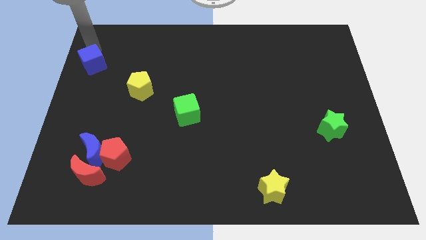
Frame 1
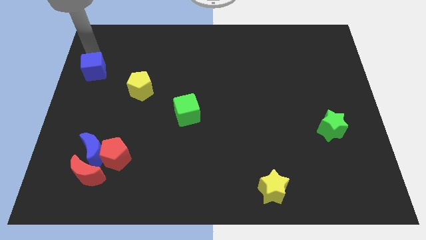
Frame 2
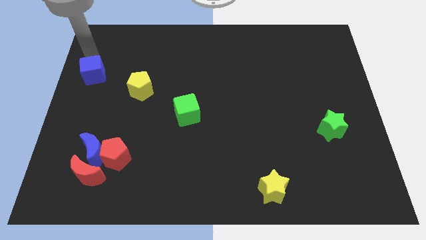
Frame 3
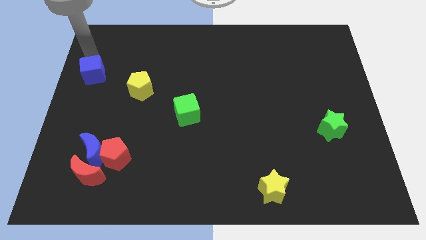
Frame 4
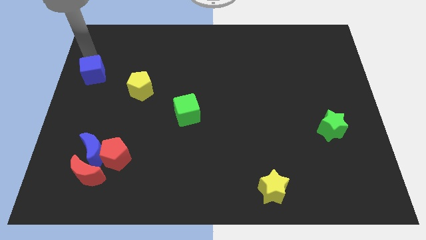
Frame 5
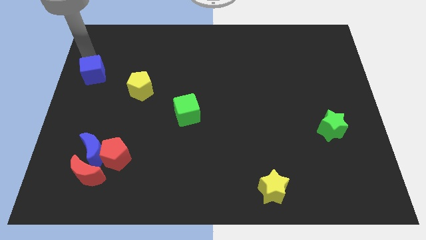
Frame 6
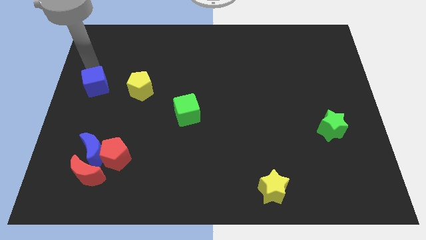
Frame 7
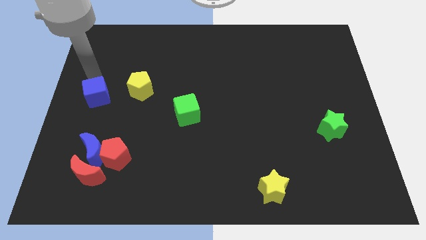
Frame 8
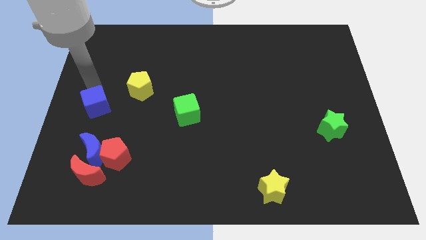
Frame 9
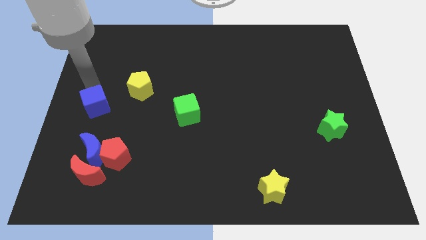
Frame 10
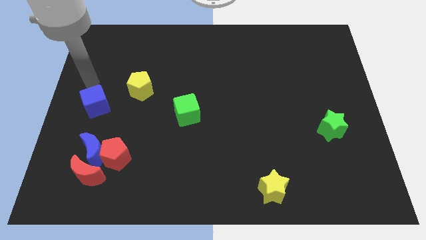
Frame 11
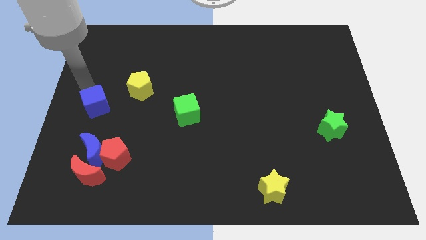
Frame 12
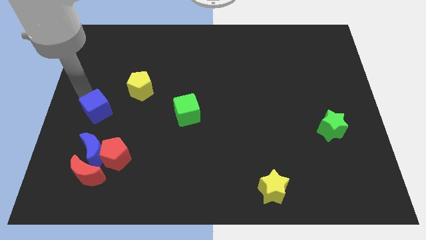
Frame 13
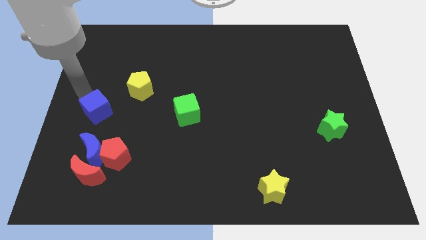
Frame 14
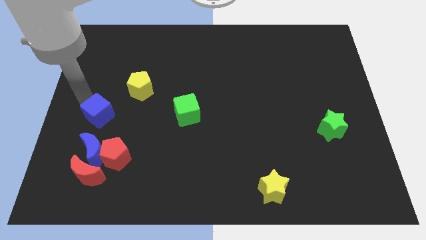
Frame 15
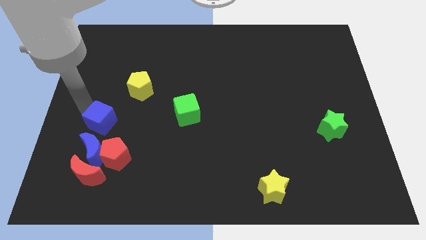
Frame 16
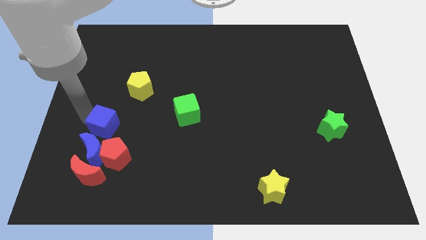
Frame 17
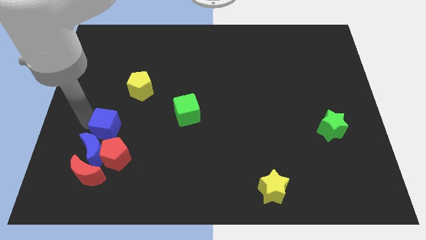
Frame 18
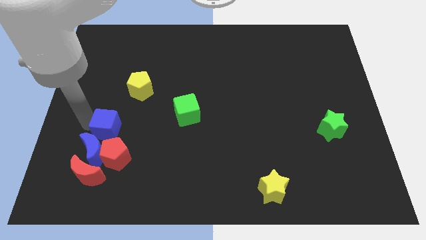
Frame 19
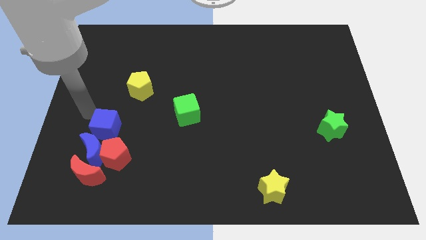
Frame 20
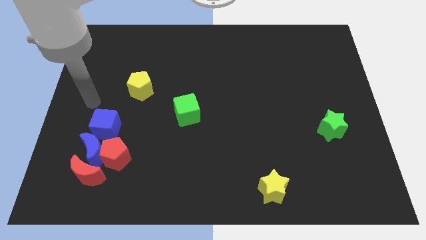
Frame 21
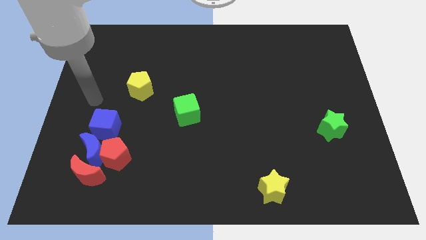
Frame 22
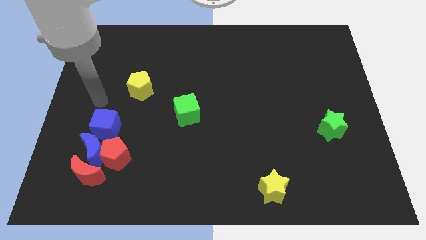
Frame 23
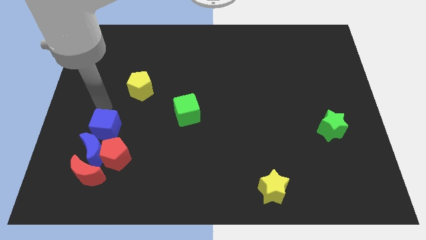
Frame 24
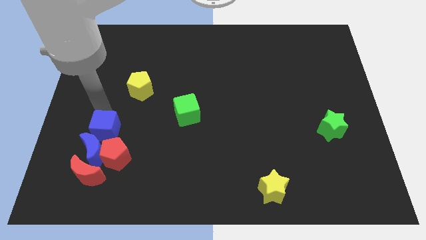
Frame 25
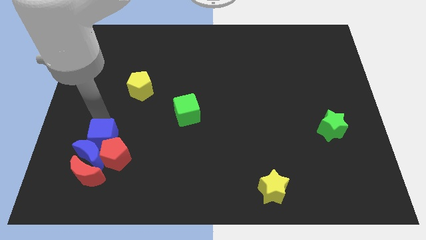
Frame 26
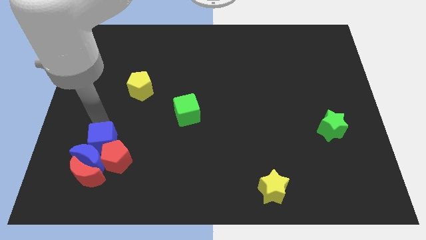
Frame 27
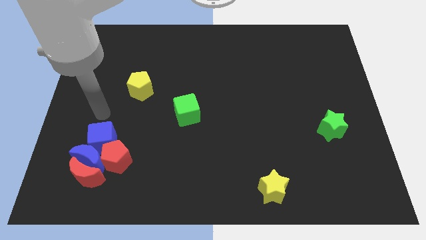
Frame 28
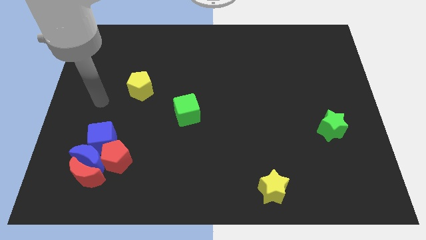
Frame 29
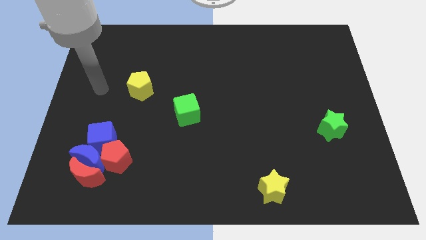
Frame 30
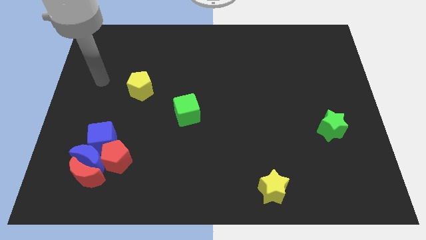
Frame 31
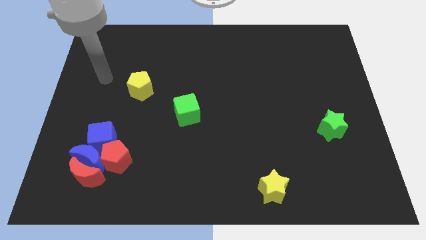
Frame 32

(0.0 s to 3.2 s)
push the blue cube to the top of the blue crescent

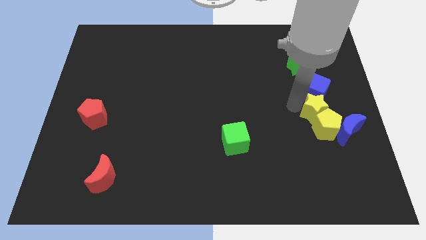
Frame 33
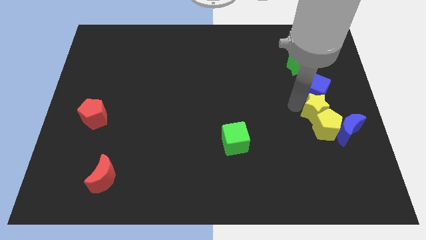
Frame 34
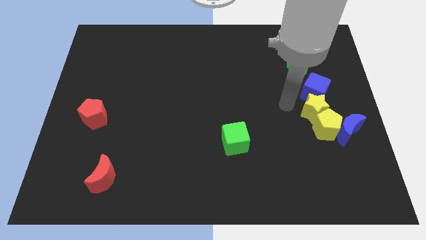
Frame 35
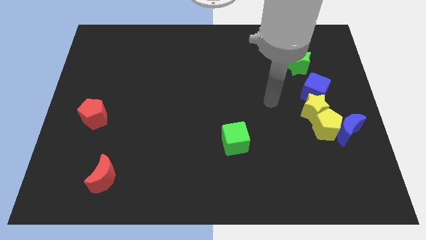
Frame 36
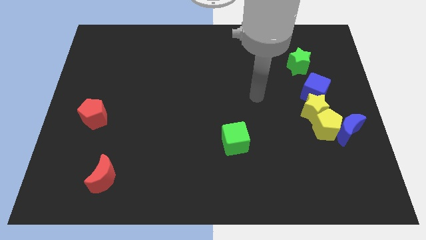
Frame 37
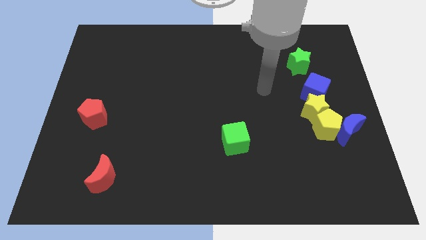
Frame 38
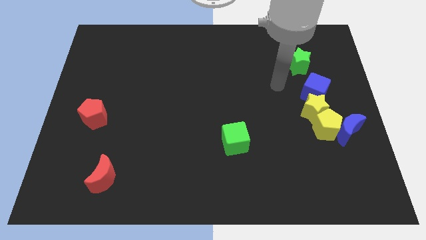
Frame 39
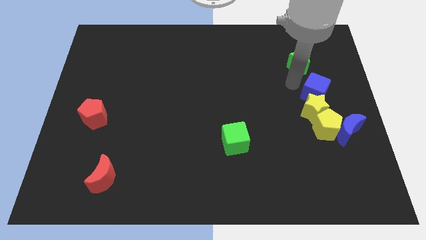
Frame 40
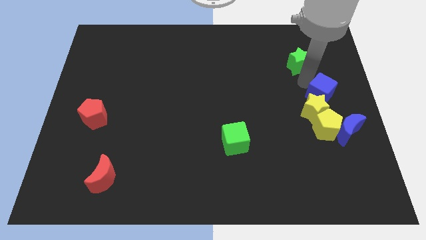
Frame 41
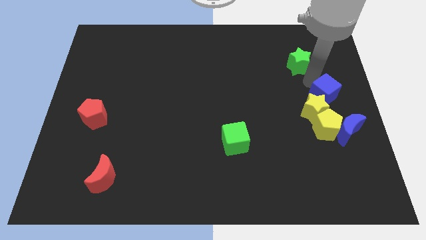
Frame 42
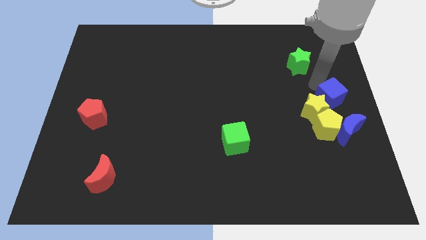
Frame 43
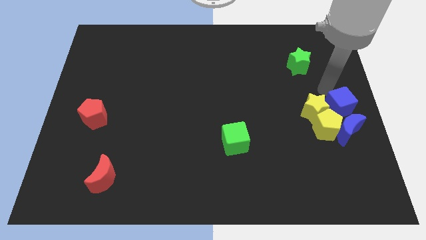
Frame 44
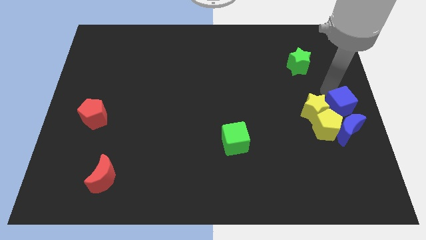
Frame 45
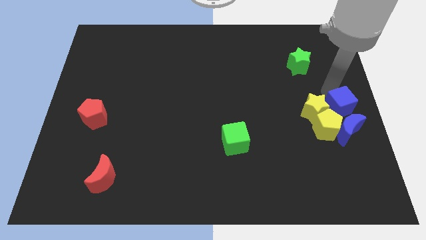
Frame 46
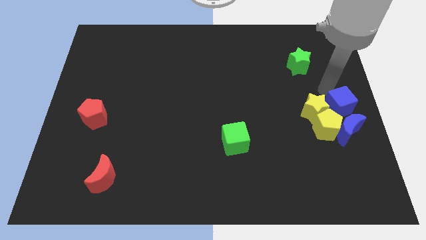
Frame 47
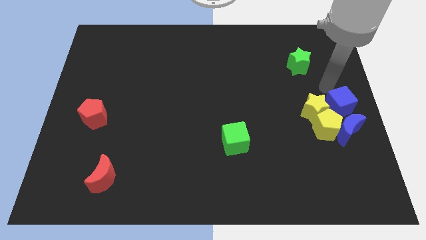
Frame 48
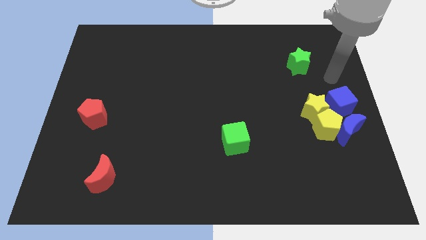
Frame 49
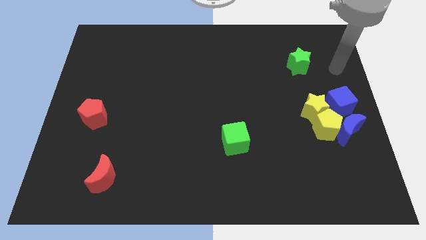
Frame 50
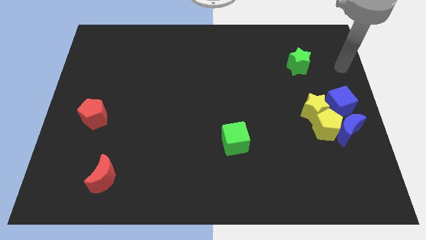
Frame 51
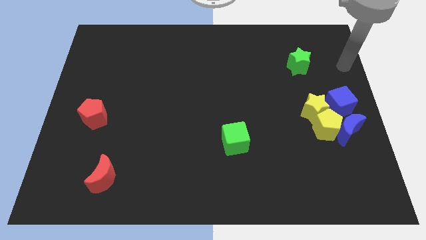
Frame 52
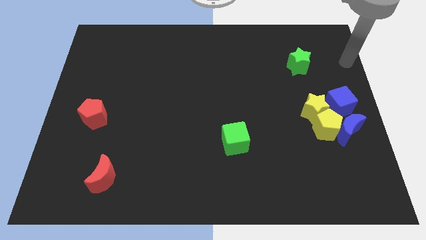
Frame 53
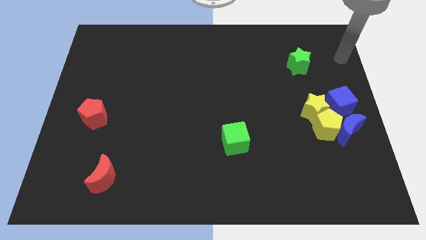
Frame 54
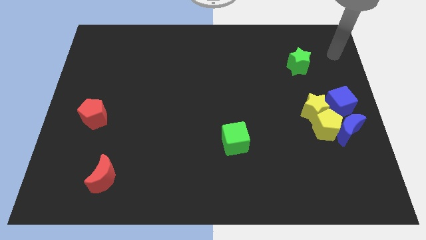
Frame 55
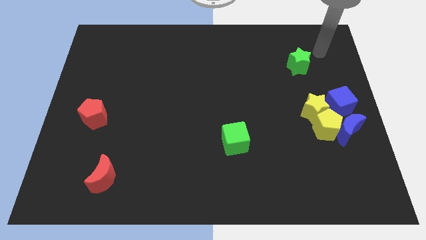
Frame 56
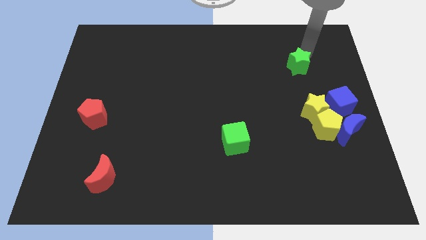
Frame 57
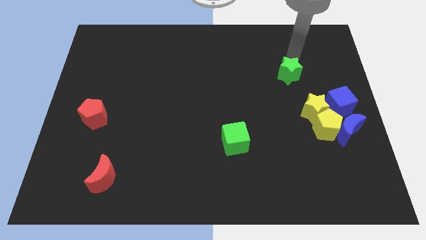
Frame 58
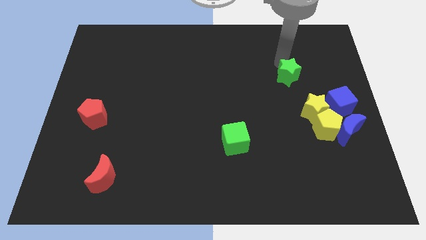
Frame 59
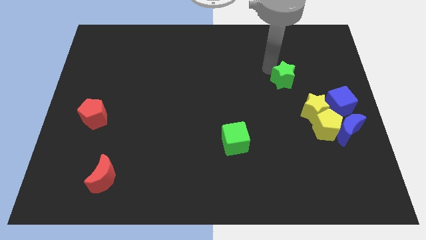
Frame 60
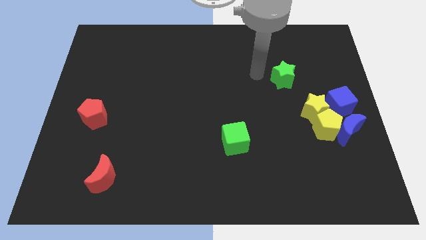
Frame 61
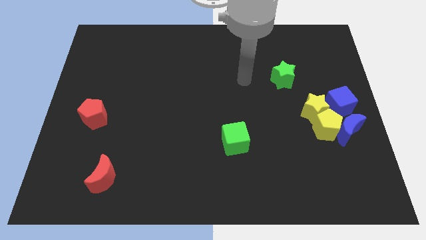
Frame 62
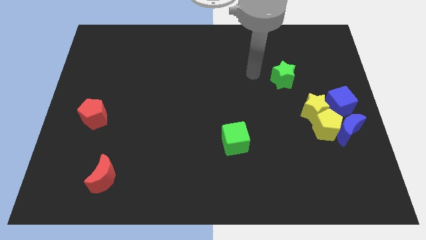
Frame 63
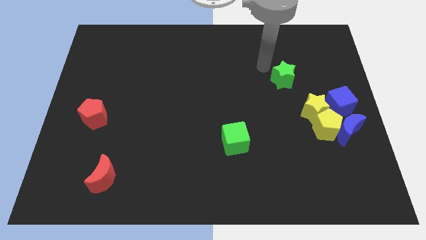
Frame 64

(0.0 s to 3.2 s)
push the blue cube into the blue moon

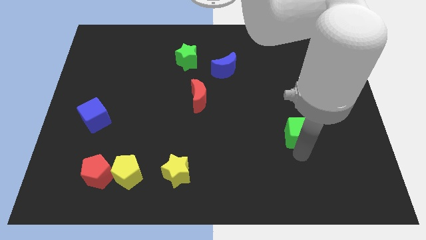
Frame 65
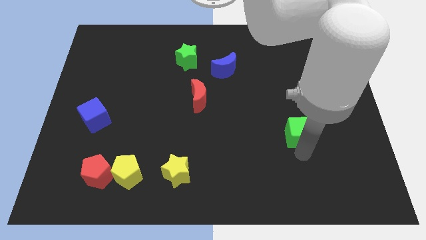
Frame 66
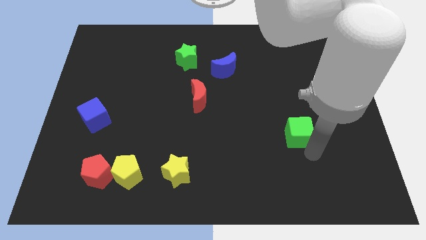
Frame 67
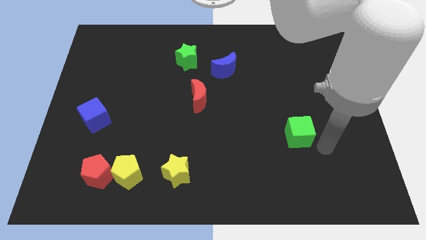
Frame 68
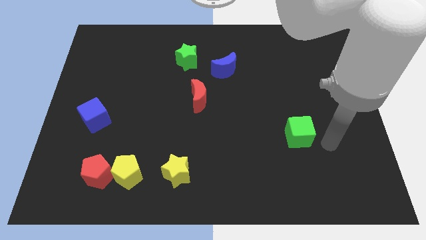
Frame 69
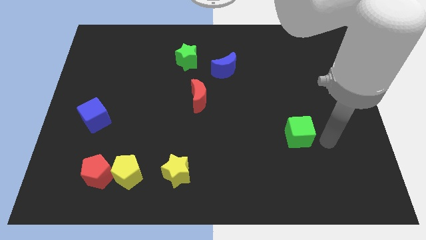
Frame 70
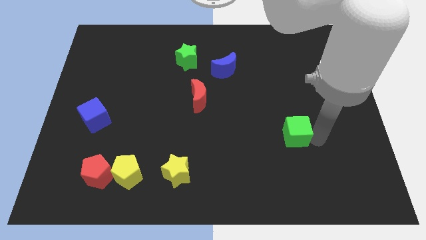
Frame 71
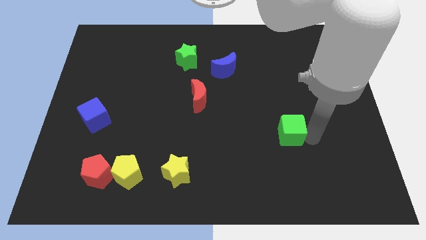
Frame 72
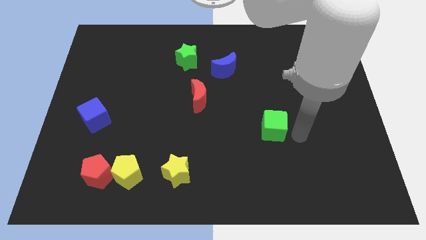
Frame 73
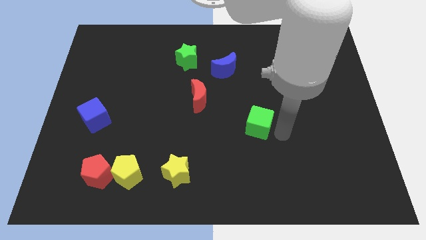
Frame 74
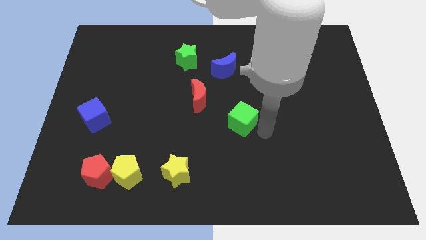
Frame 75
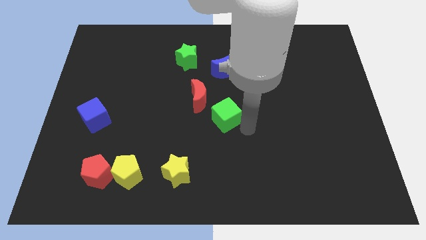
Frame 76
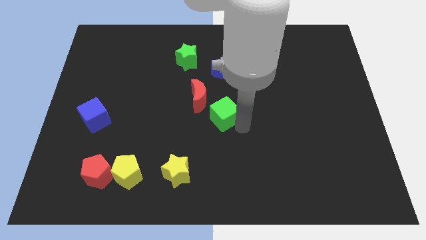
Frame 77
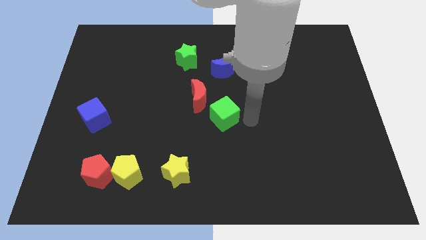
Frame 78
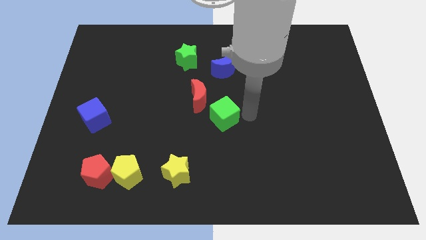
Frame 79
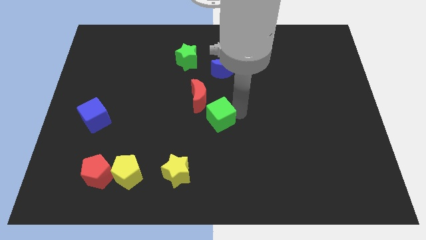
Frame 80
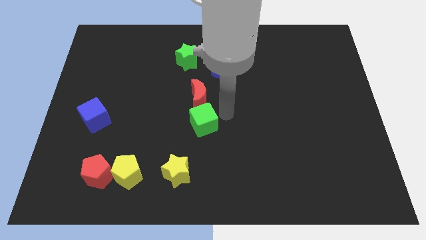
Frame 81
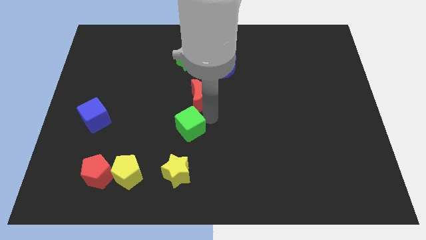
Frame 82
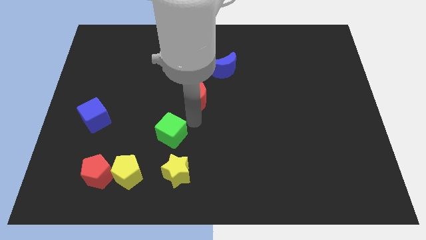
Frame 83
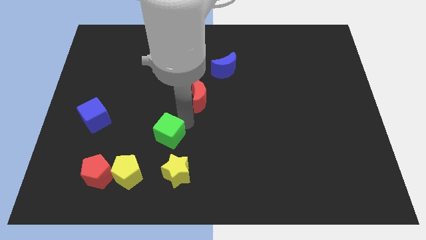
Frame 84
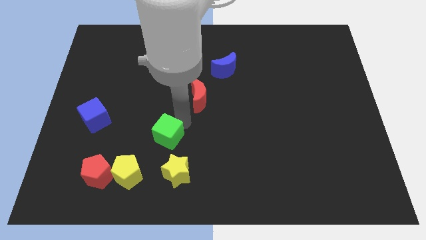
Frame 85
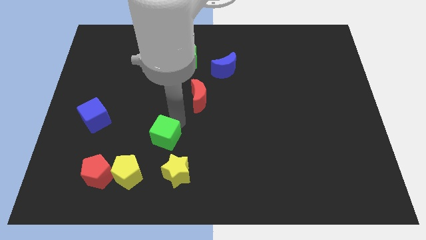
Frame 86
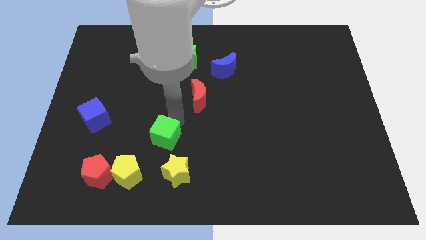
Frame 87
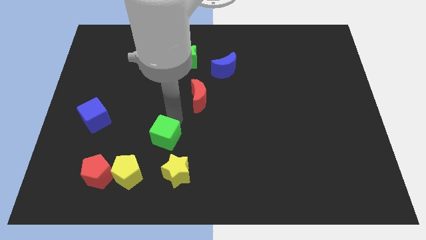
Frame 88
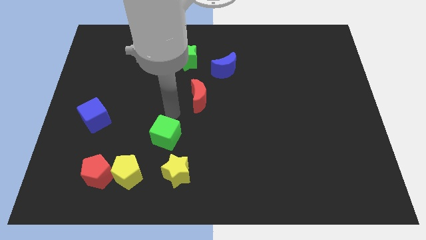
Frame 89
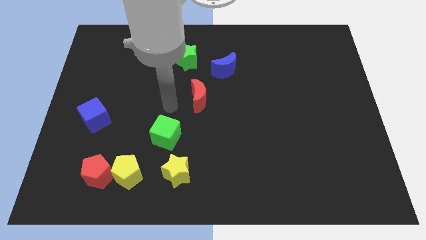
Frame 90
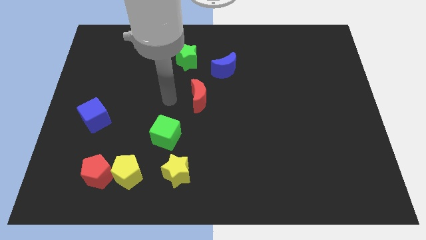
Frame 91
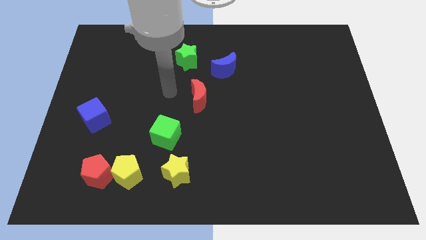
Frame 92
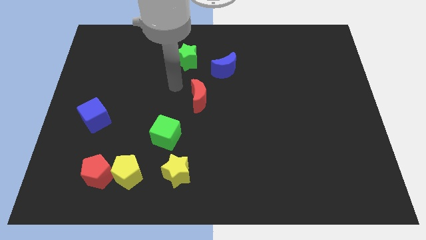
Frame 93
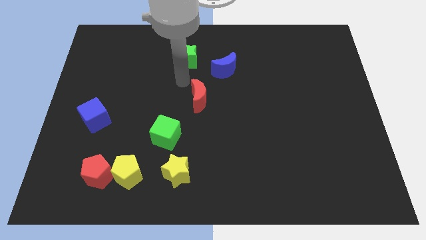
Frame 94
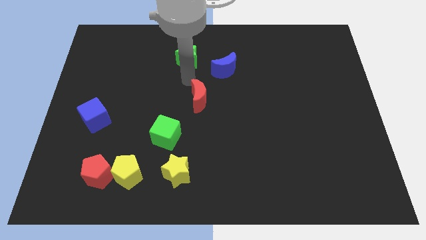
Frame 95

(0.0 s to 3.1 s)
push green cube to the top of yellow star
